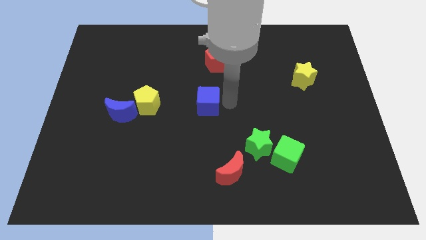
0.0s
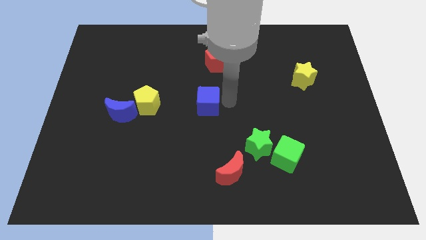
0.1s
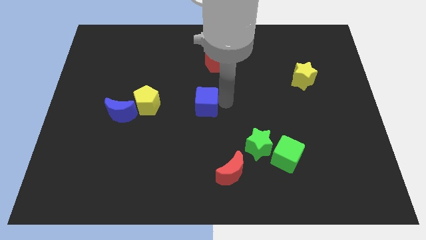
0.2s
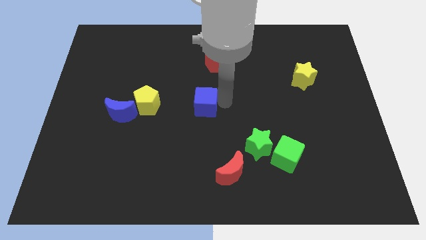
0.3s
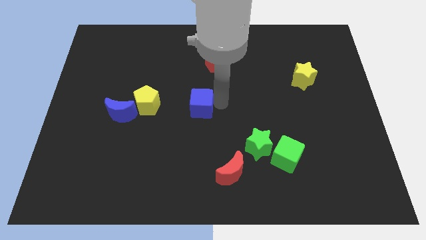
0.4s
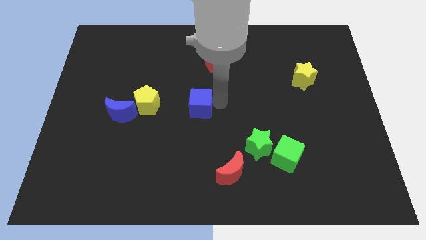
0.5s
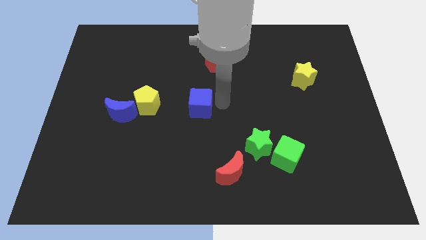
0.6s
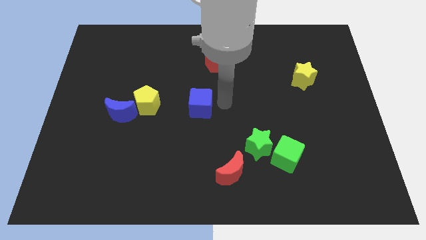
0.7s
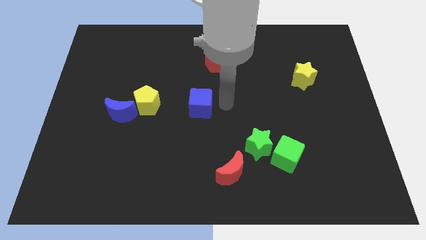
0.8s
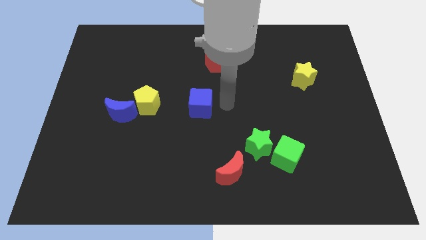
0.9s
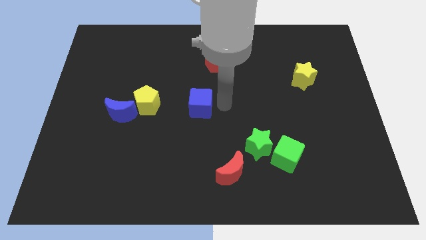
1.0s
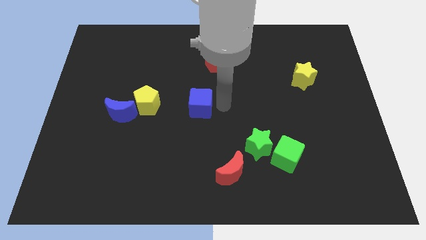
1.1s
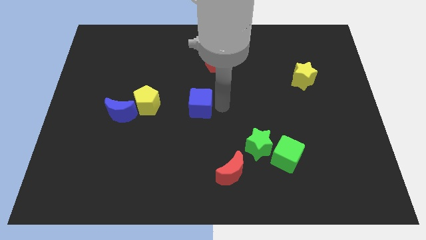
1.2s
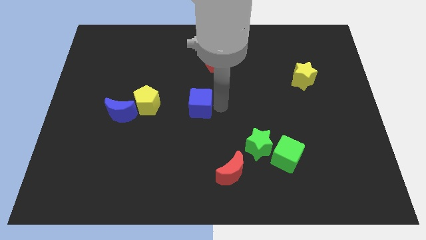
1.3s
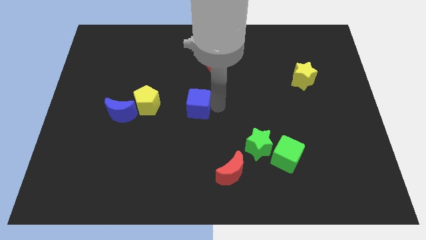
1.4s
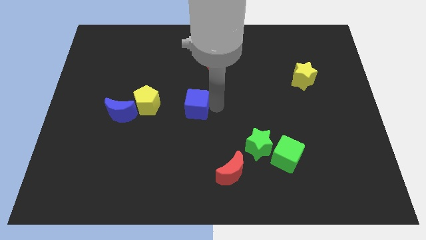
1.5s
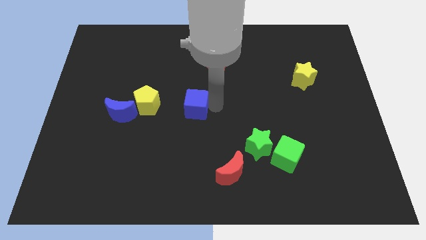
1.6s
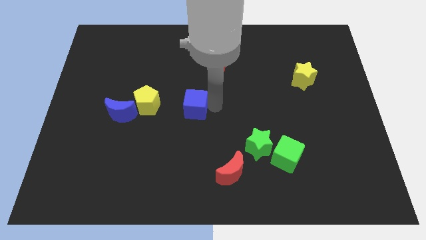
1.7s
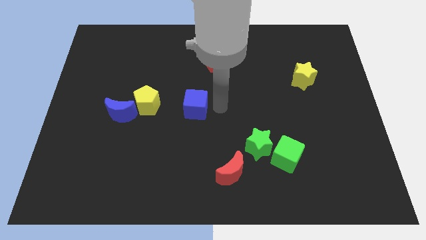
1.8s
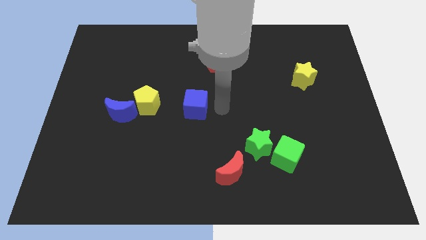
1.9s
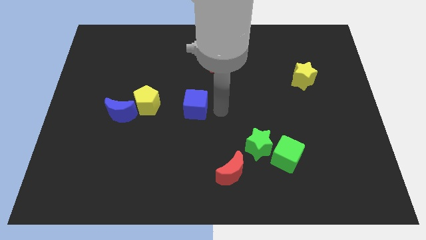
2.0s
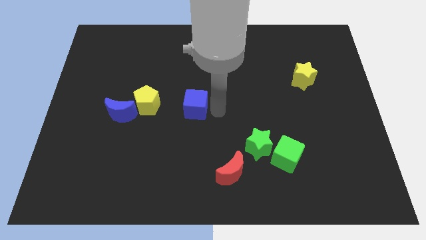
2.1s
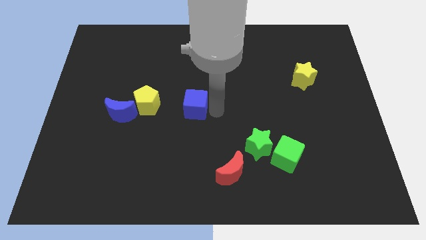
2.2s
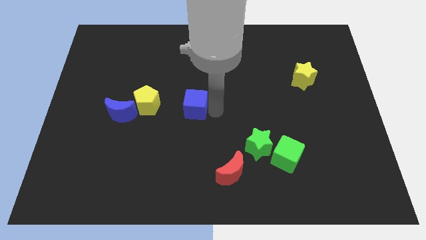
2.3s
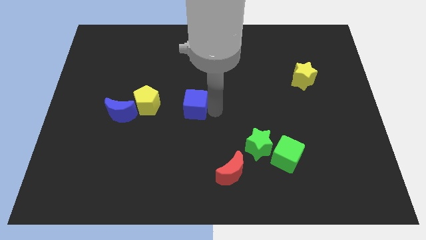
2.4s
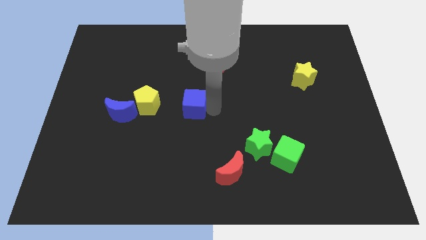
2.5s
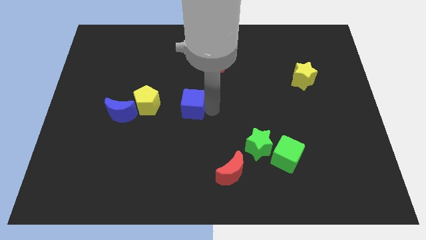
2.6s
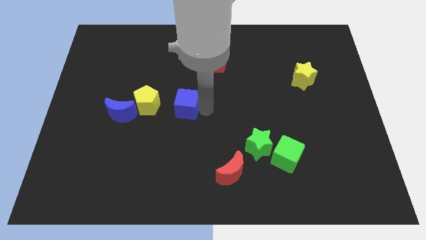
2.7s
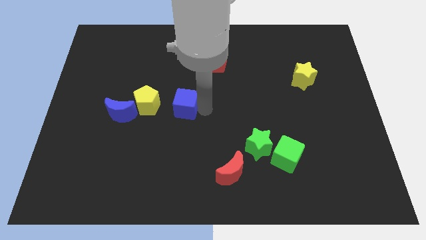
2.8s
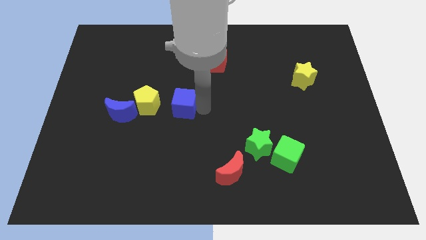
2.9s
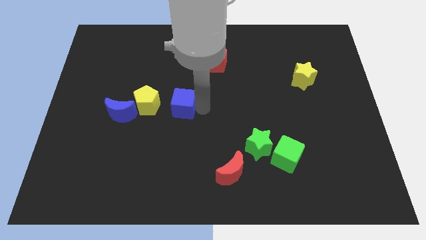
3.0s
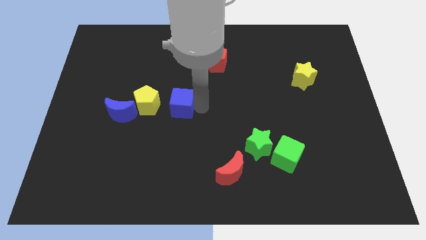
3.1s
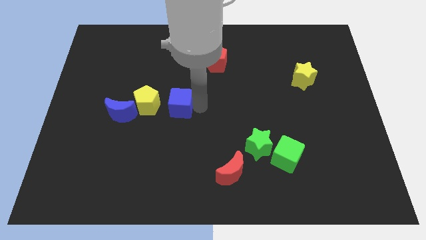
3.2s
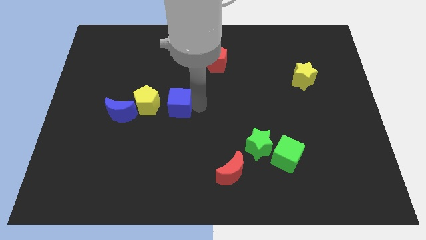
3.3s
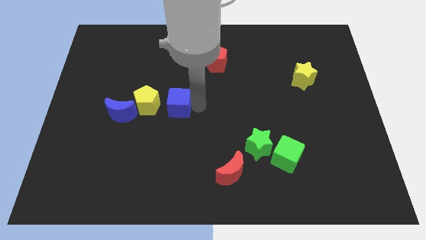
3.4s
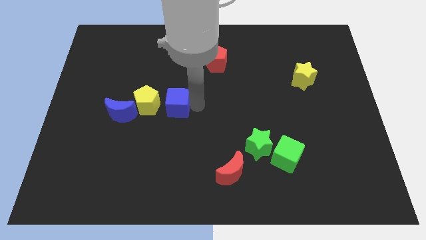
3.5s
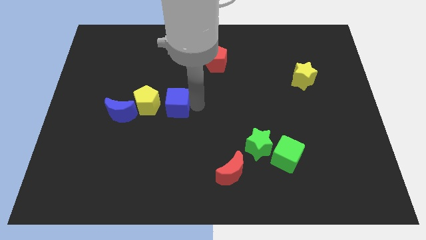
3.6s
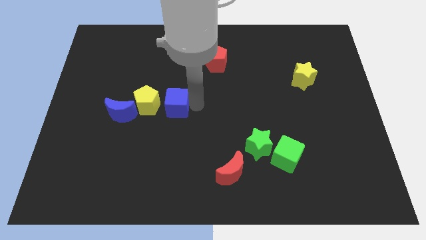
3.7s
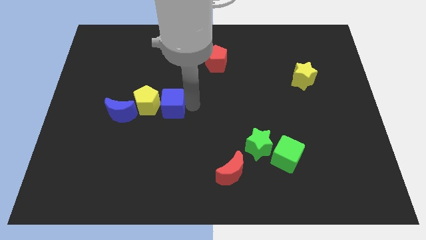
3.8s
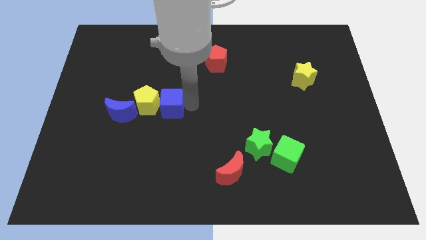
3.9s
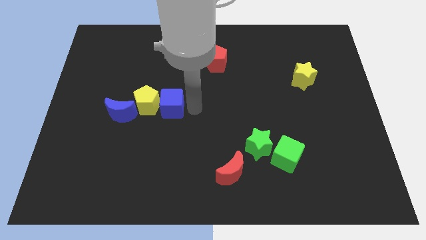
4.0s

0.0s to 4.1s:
slide the blue cube close to the right side of the yellow pentagon

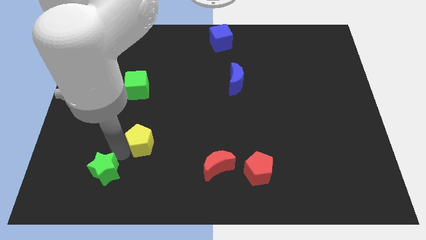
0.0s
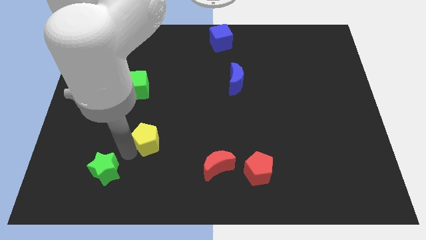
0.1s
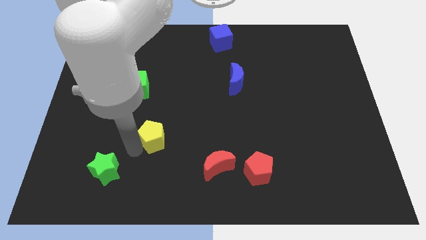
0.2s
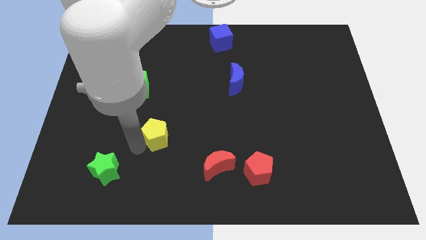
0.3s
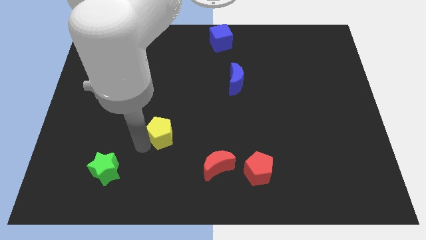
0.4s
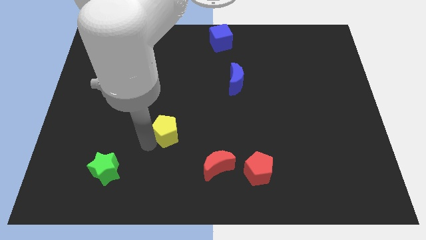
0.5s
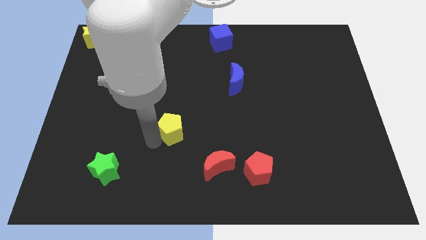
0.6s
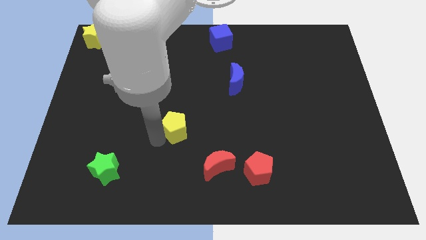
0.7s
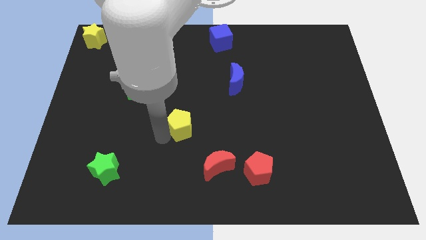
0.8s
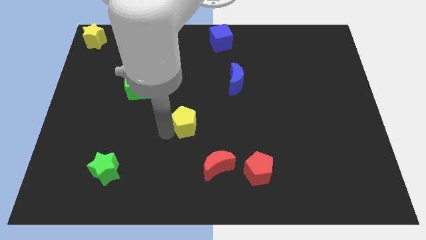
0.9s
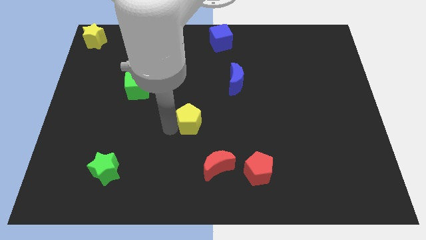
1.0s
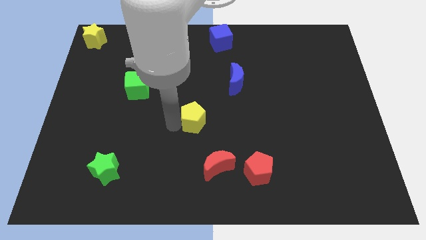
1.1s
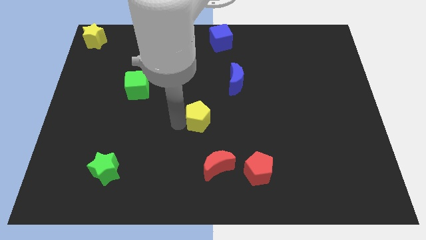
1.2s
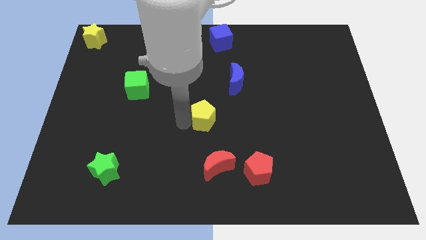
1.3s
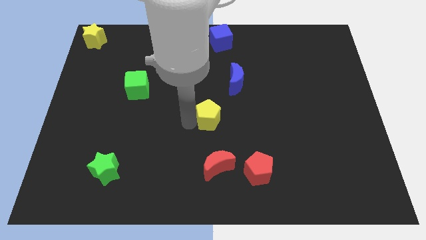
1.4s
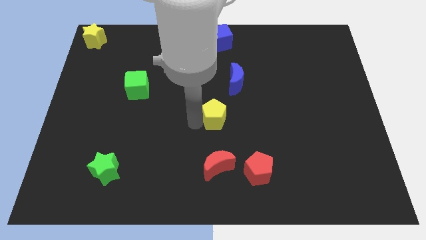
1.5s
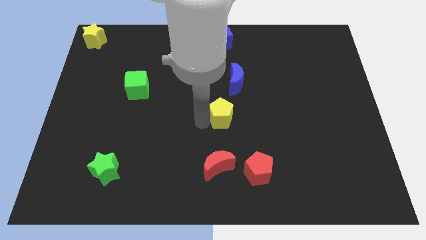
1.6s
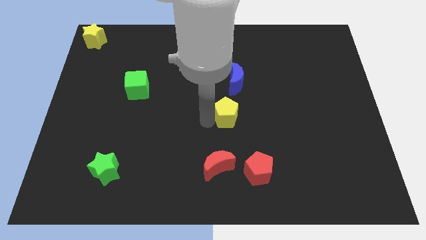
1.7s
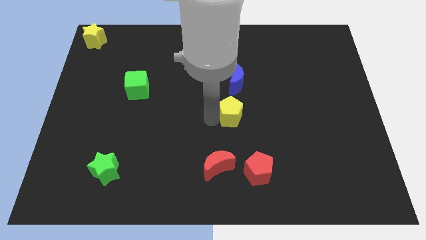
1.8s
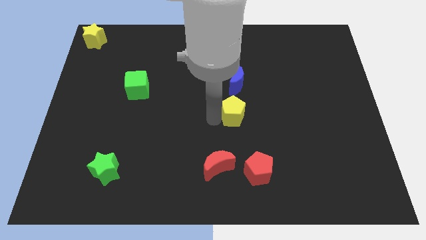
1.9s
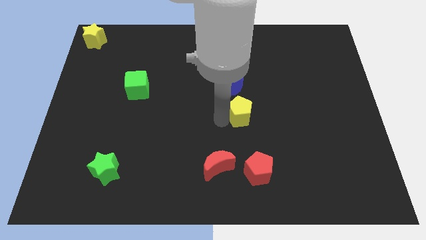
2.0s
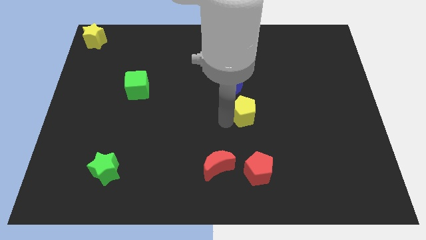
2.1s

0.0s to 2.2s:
slide the yellow pentagon to the bottom of blue moon

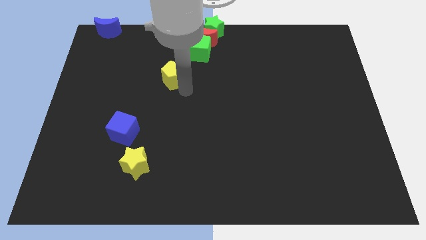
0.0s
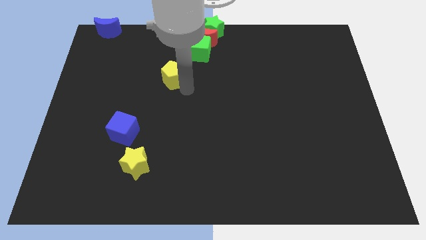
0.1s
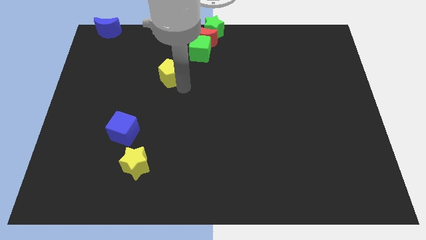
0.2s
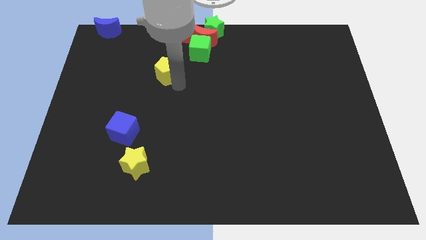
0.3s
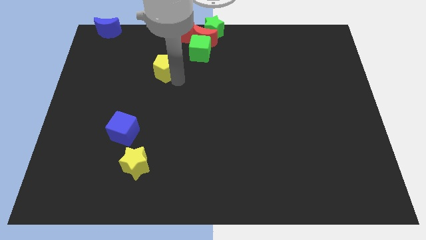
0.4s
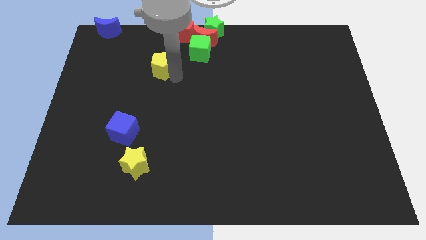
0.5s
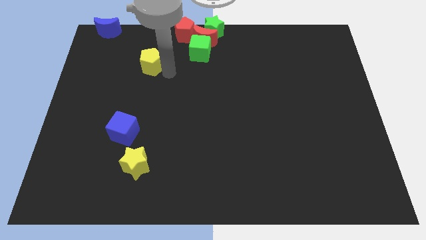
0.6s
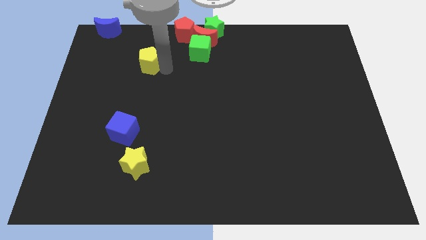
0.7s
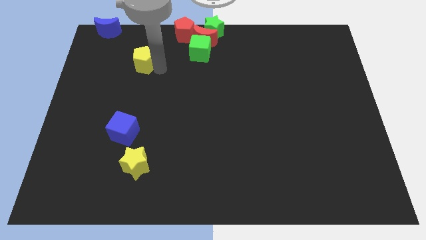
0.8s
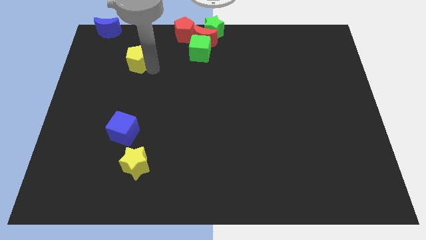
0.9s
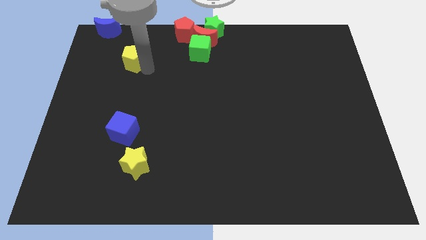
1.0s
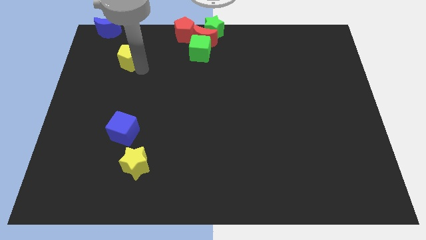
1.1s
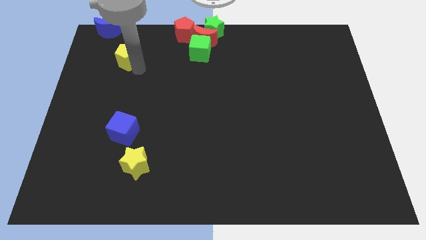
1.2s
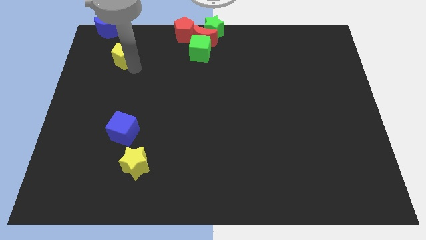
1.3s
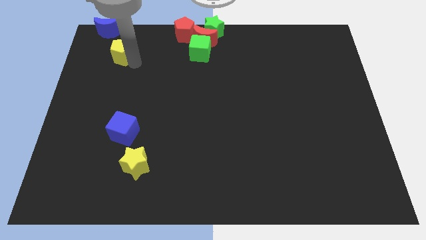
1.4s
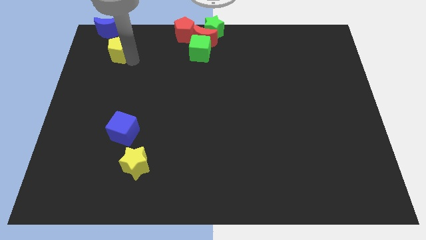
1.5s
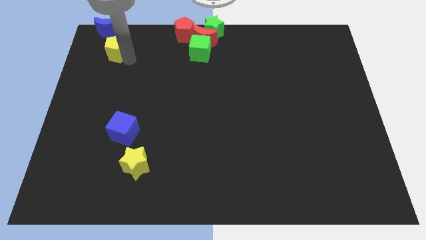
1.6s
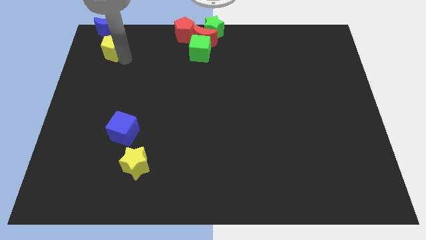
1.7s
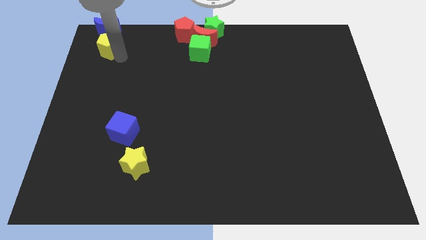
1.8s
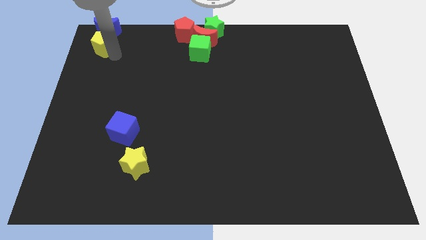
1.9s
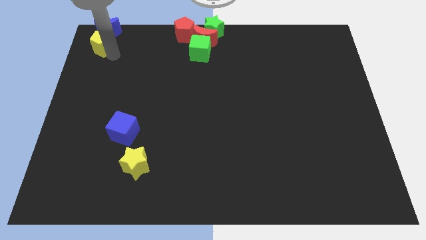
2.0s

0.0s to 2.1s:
push yellow pentagon below blue crescent

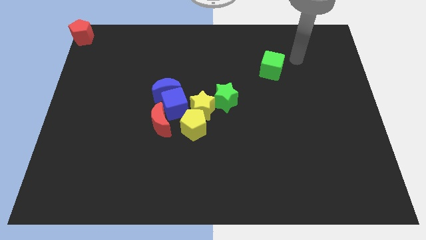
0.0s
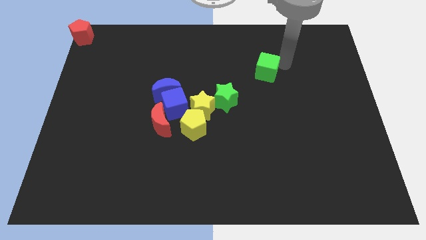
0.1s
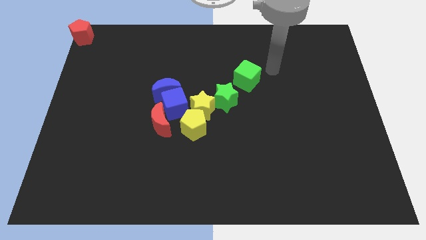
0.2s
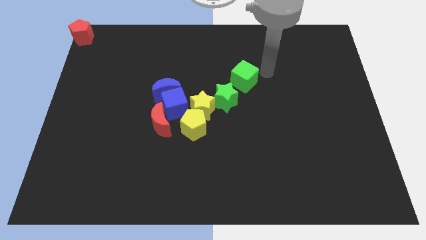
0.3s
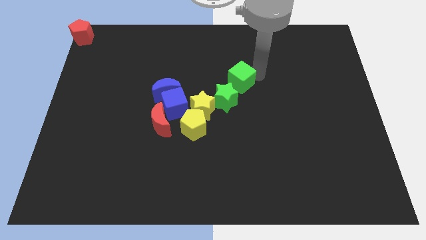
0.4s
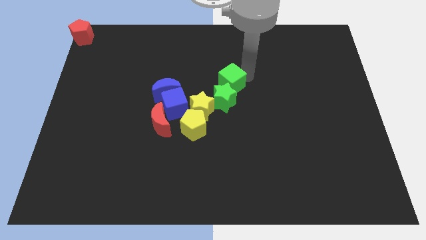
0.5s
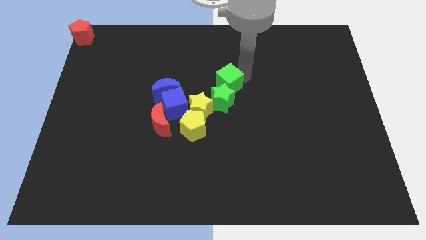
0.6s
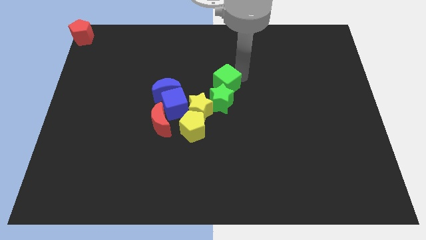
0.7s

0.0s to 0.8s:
push the green cube into the green star
